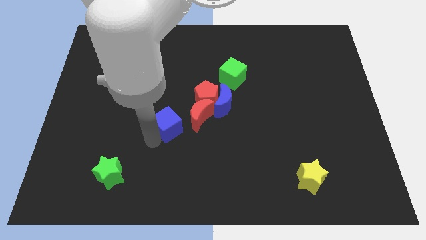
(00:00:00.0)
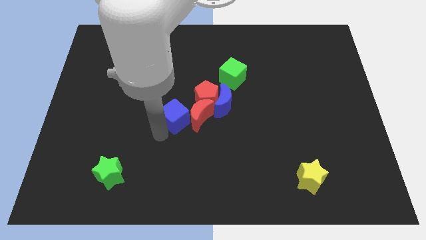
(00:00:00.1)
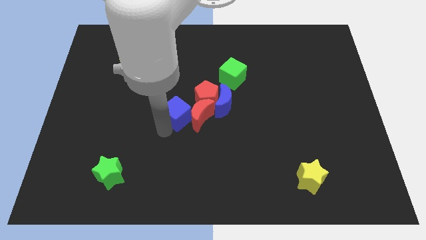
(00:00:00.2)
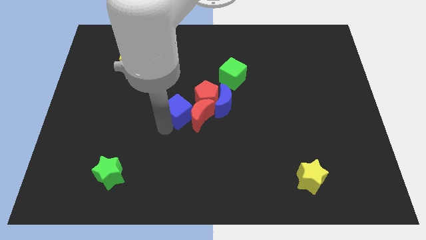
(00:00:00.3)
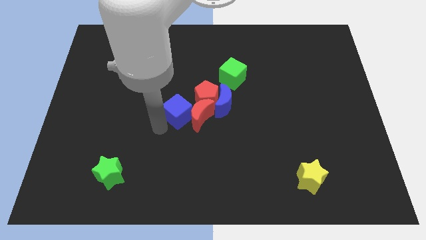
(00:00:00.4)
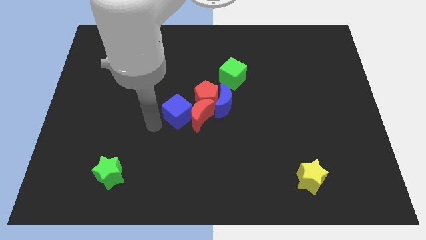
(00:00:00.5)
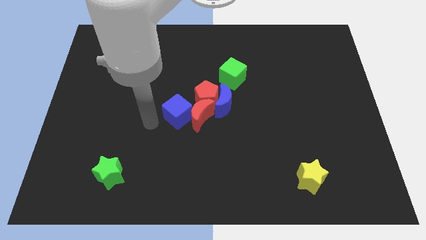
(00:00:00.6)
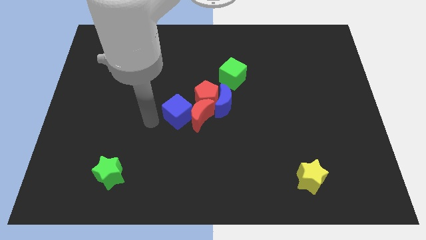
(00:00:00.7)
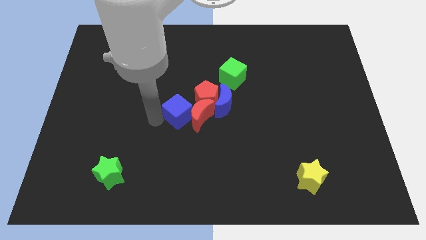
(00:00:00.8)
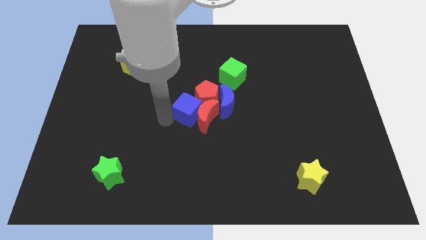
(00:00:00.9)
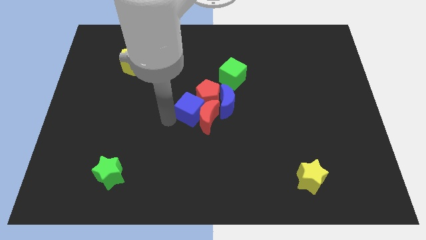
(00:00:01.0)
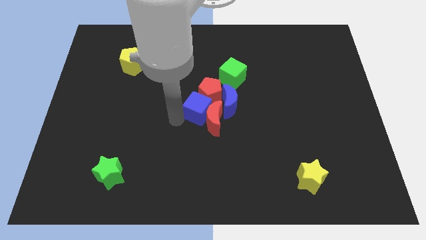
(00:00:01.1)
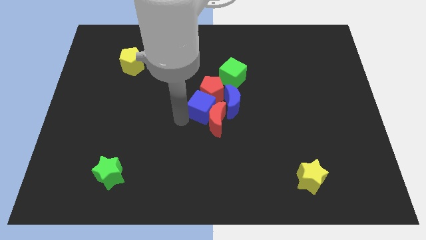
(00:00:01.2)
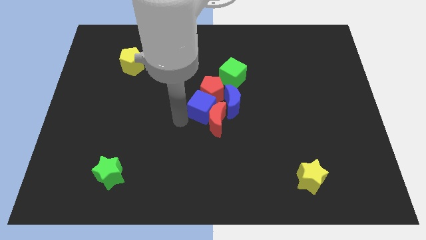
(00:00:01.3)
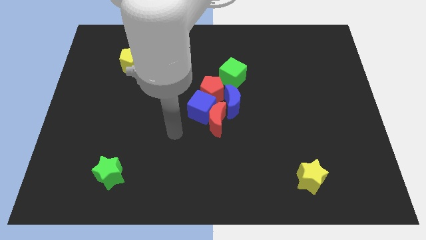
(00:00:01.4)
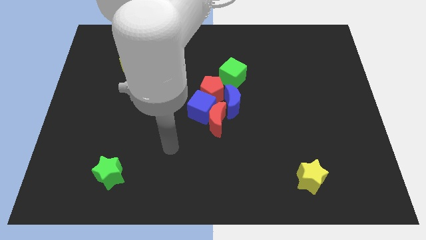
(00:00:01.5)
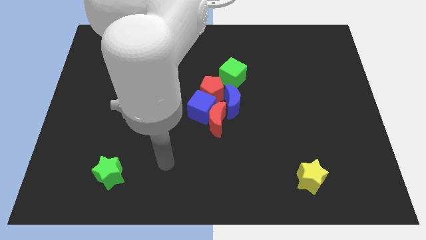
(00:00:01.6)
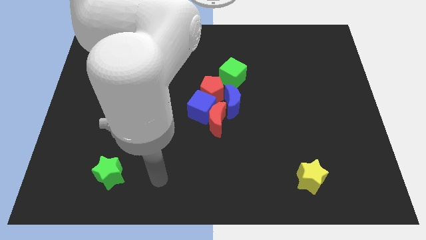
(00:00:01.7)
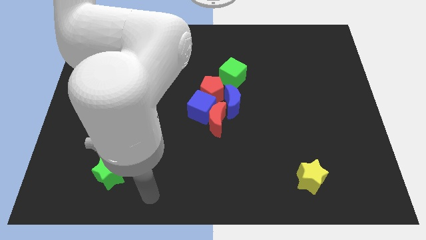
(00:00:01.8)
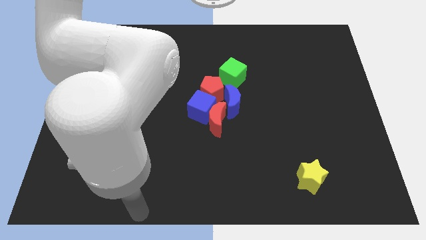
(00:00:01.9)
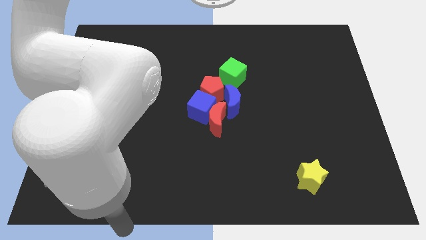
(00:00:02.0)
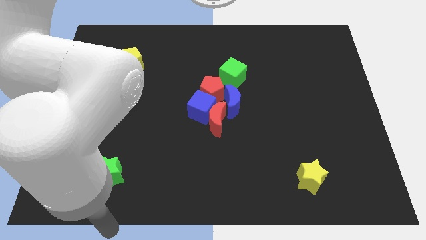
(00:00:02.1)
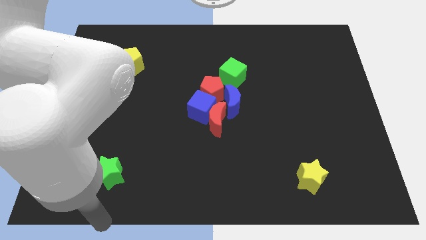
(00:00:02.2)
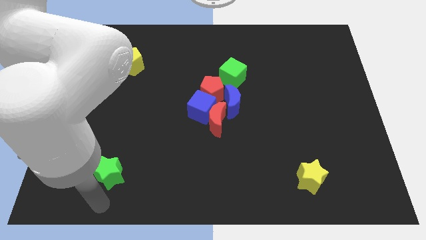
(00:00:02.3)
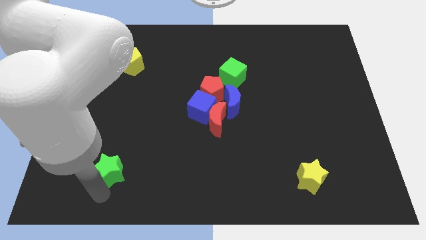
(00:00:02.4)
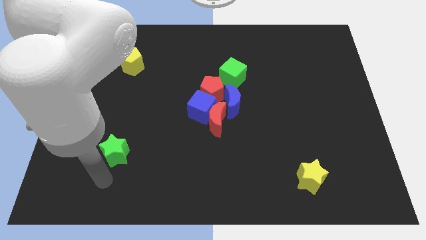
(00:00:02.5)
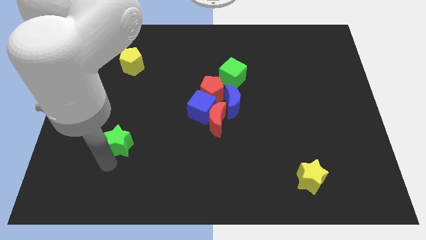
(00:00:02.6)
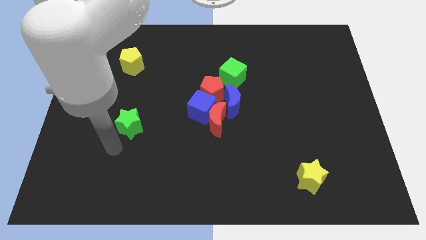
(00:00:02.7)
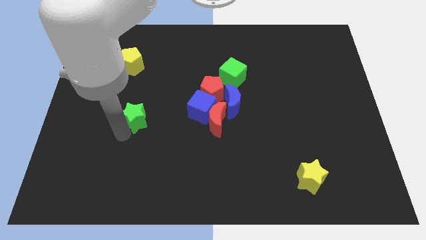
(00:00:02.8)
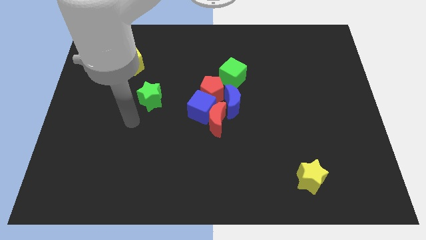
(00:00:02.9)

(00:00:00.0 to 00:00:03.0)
place the green star left to the blue cube

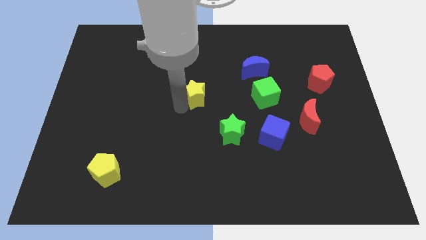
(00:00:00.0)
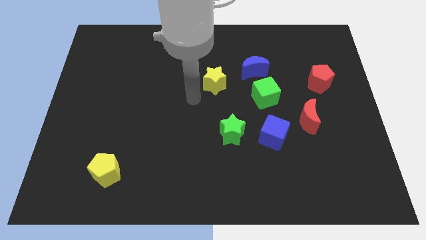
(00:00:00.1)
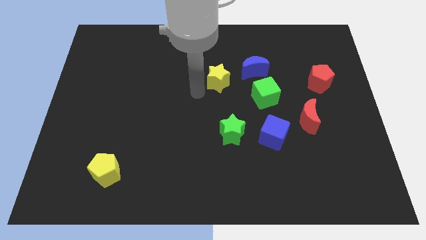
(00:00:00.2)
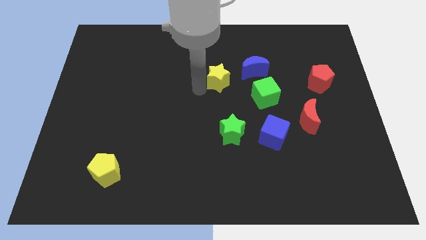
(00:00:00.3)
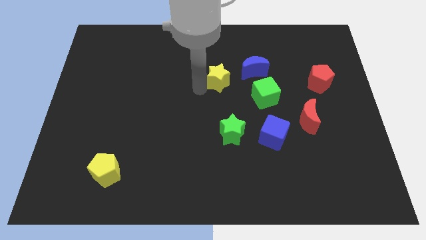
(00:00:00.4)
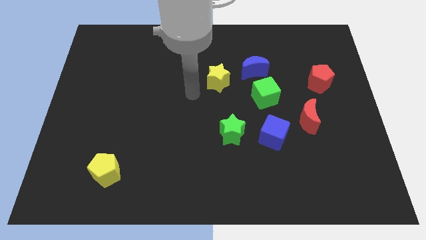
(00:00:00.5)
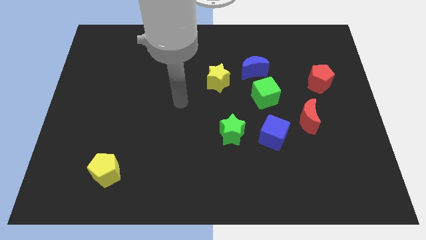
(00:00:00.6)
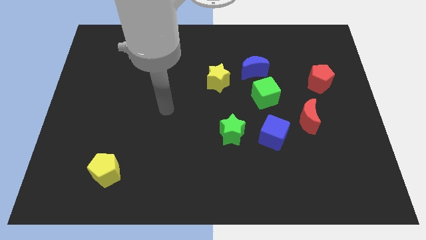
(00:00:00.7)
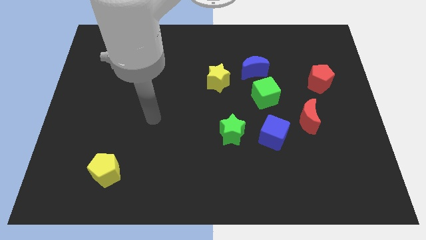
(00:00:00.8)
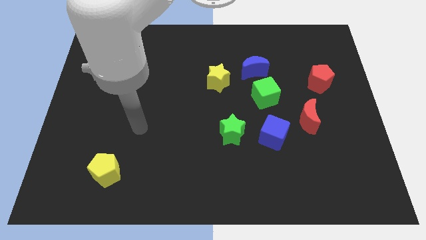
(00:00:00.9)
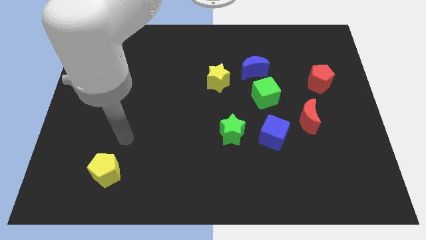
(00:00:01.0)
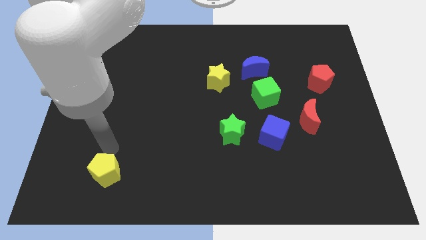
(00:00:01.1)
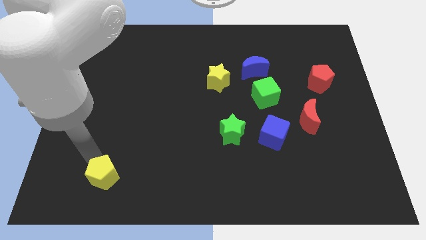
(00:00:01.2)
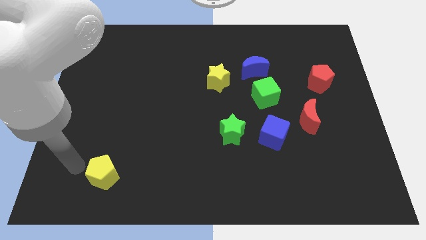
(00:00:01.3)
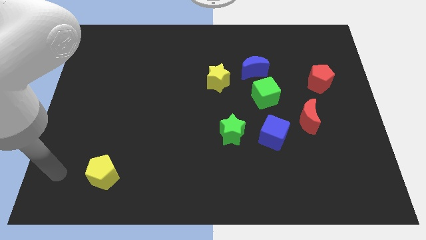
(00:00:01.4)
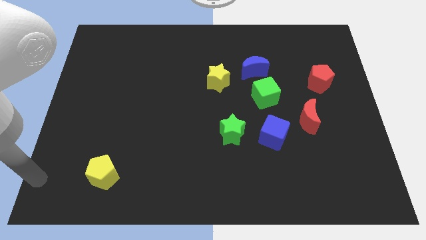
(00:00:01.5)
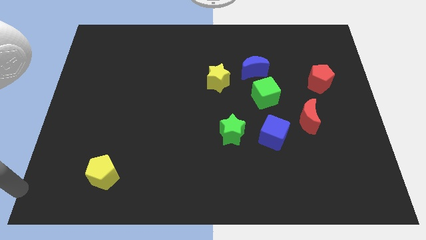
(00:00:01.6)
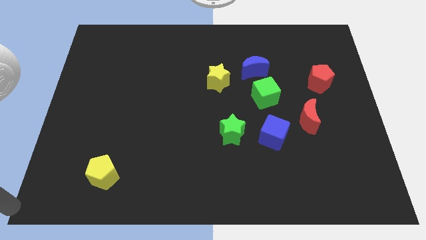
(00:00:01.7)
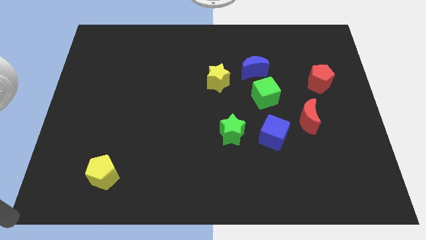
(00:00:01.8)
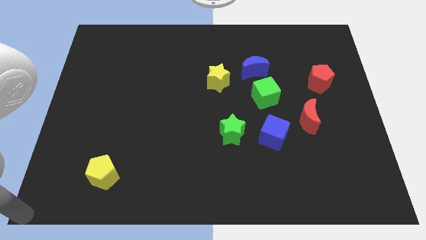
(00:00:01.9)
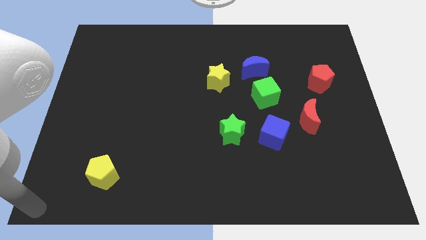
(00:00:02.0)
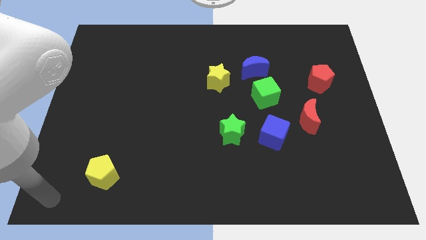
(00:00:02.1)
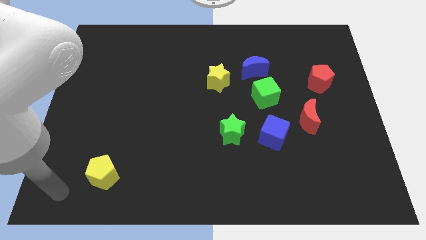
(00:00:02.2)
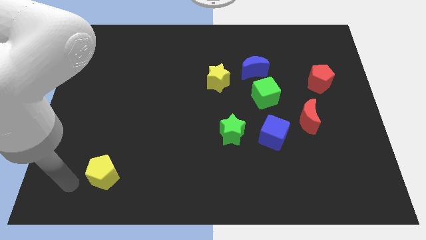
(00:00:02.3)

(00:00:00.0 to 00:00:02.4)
place your arm towards left side of yellow pentagon

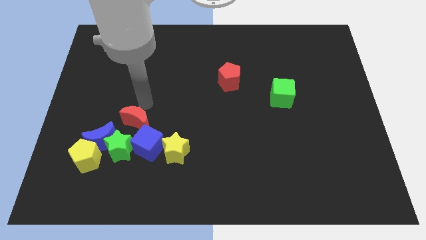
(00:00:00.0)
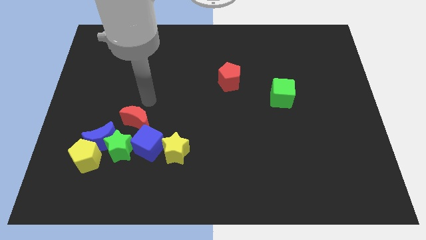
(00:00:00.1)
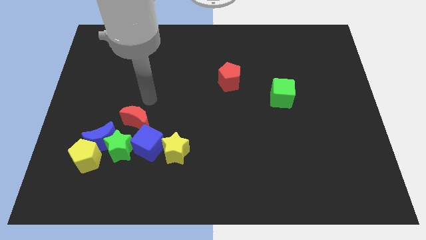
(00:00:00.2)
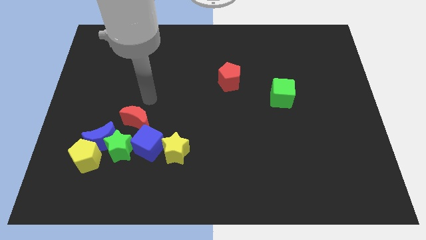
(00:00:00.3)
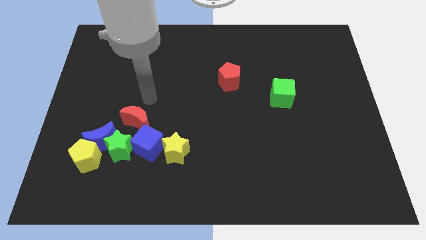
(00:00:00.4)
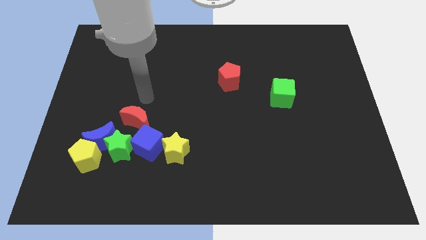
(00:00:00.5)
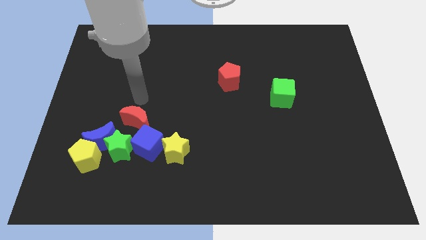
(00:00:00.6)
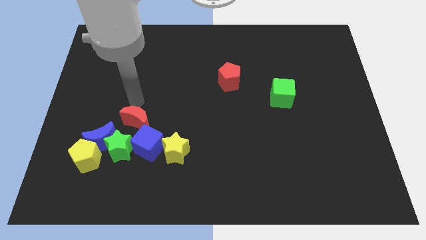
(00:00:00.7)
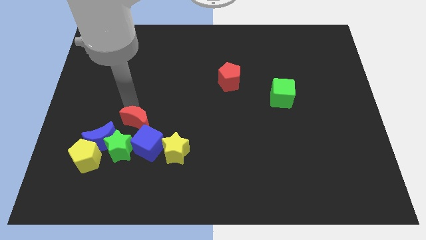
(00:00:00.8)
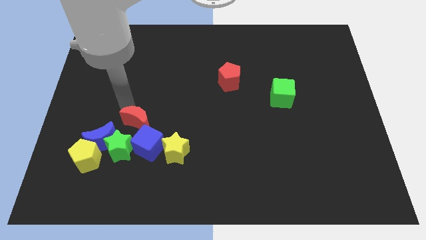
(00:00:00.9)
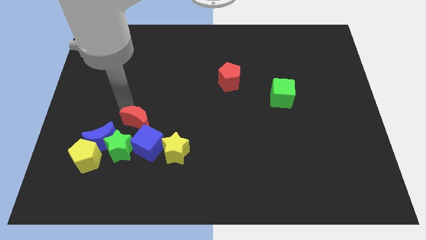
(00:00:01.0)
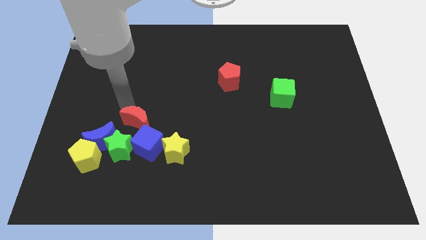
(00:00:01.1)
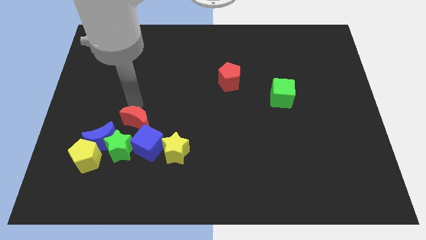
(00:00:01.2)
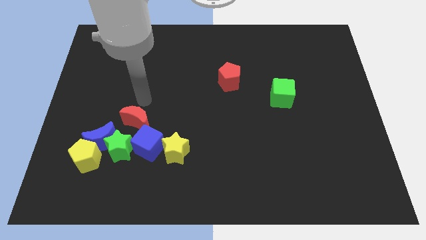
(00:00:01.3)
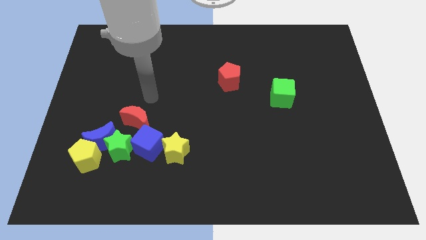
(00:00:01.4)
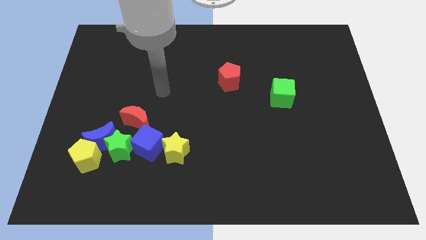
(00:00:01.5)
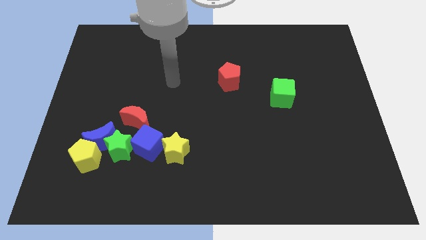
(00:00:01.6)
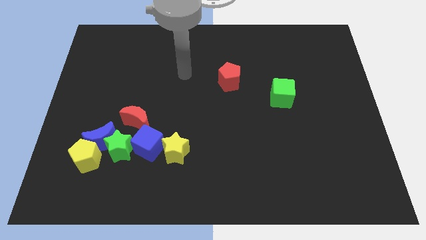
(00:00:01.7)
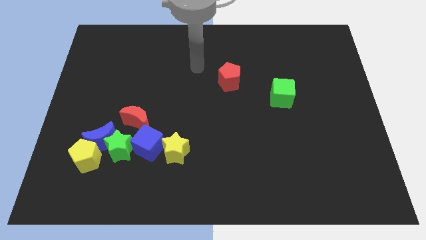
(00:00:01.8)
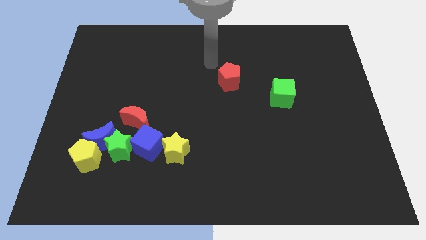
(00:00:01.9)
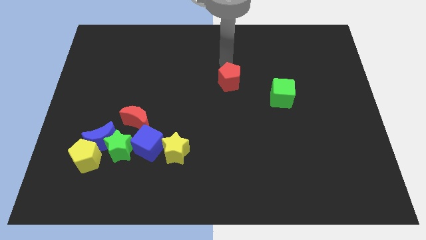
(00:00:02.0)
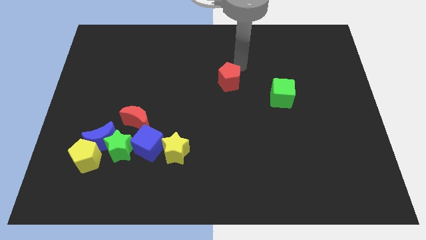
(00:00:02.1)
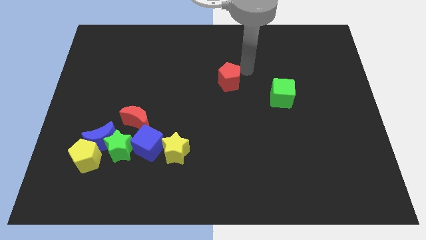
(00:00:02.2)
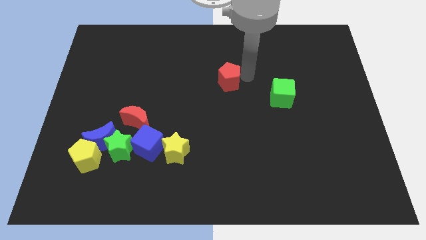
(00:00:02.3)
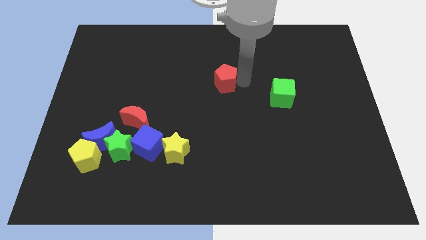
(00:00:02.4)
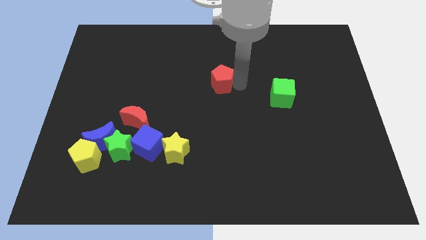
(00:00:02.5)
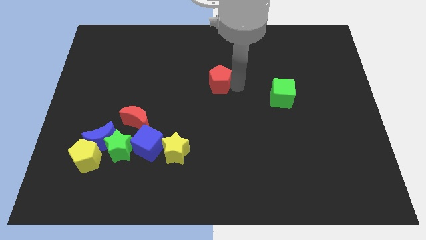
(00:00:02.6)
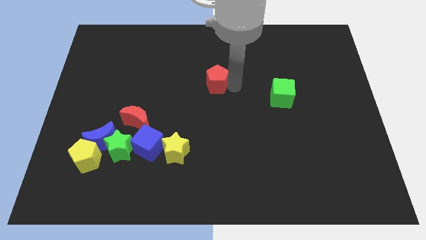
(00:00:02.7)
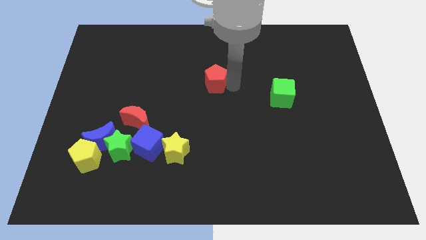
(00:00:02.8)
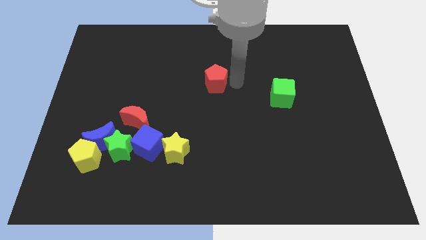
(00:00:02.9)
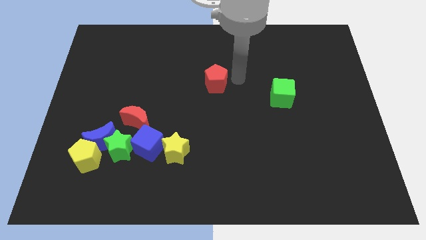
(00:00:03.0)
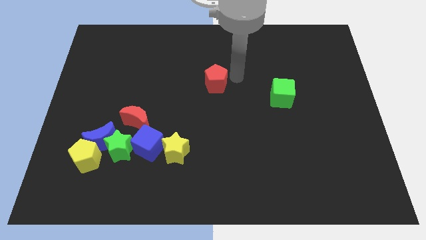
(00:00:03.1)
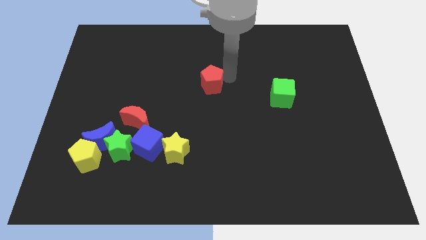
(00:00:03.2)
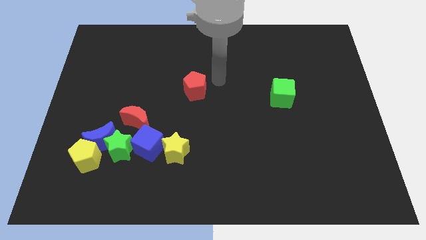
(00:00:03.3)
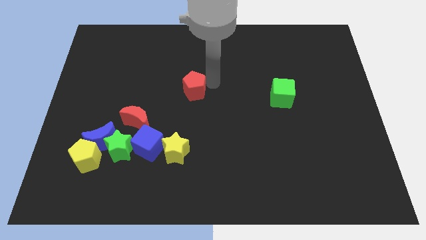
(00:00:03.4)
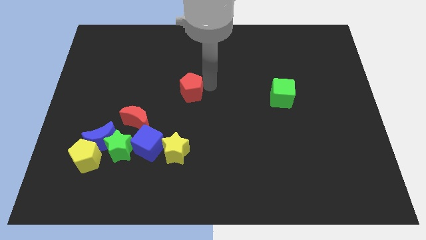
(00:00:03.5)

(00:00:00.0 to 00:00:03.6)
push the red pentagon towards the group of blocks
